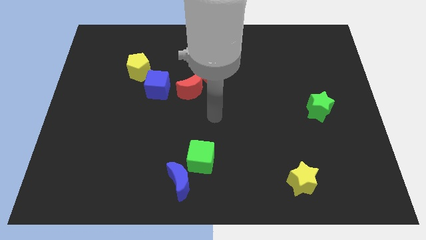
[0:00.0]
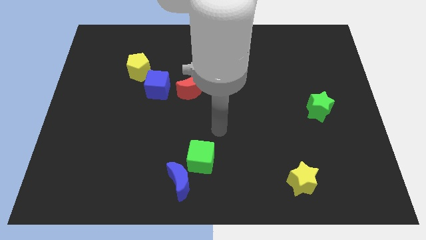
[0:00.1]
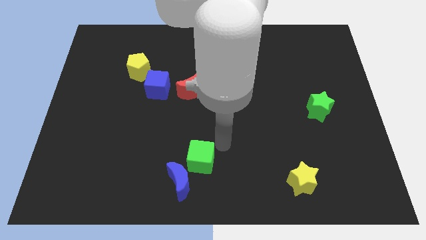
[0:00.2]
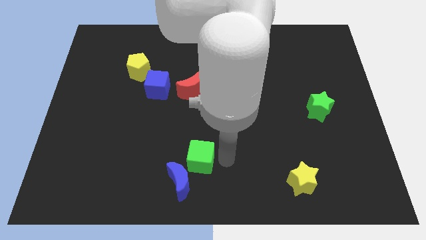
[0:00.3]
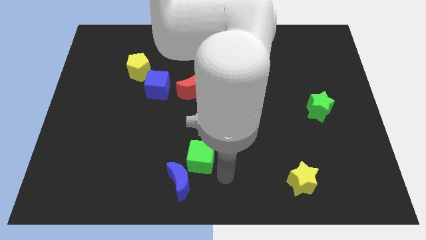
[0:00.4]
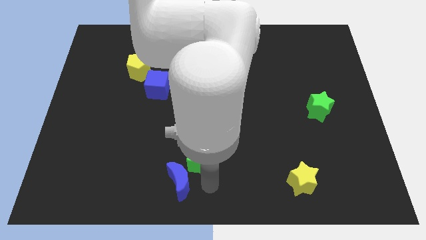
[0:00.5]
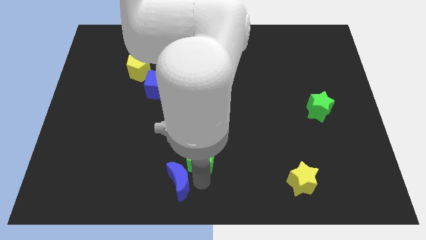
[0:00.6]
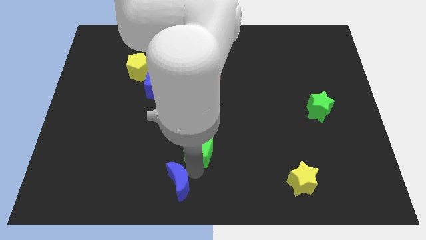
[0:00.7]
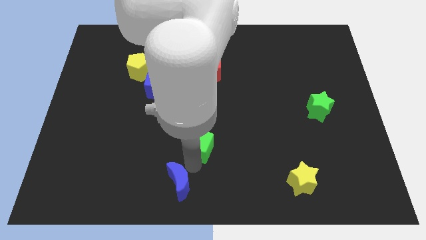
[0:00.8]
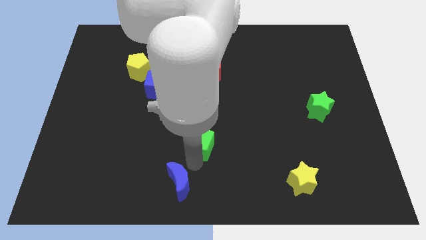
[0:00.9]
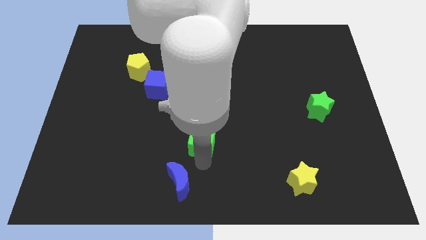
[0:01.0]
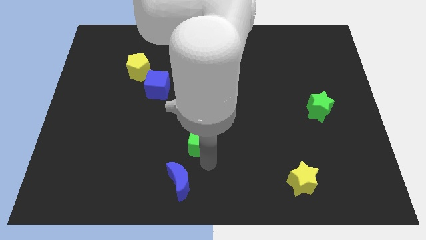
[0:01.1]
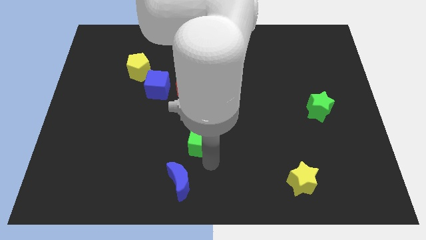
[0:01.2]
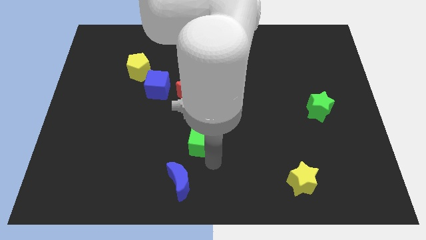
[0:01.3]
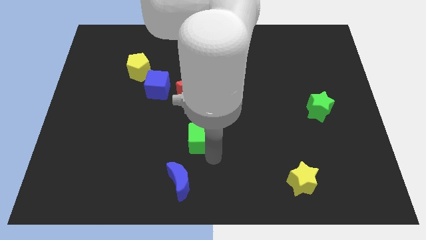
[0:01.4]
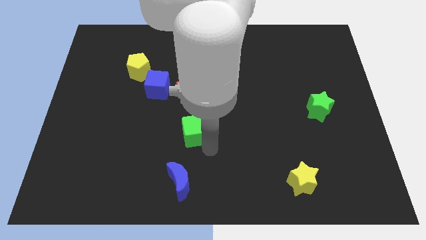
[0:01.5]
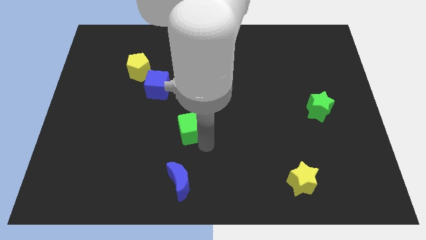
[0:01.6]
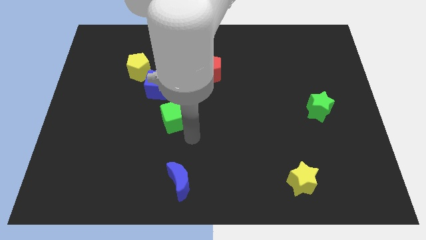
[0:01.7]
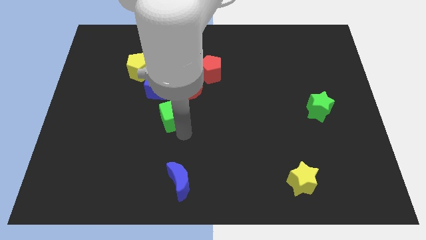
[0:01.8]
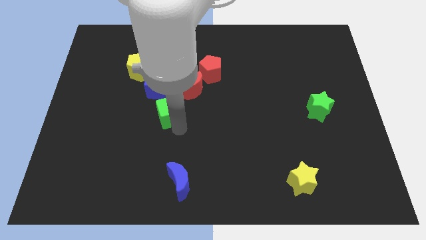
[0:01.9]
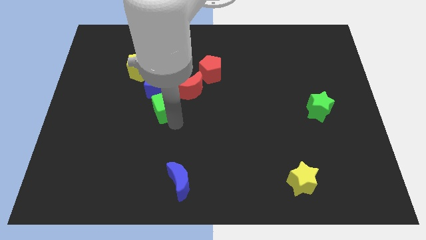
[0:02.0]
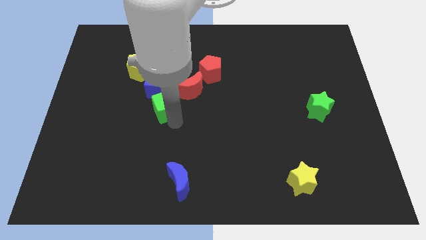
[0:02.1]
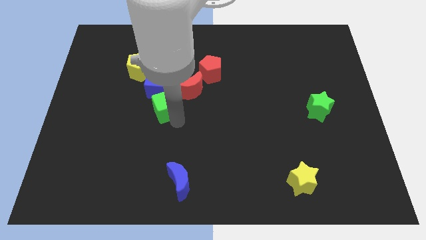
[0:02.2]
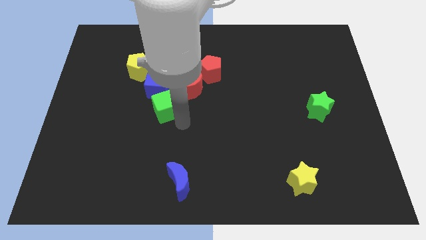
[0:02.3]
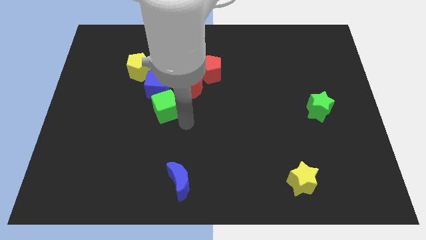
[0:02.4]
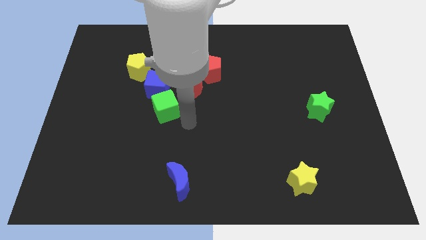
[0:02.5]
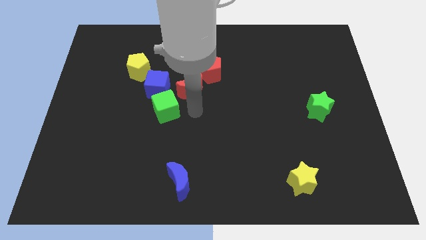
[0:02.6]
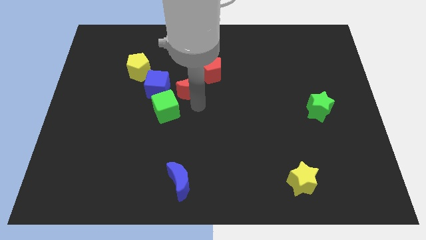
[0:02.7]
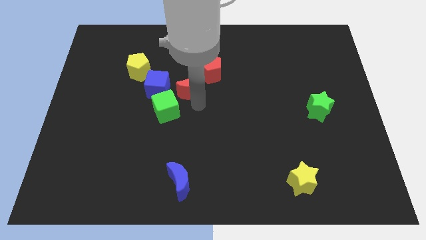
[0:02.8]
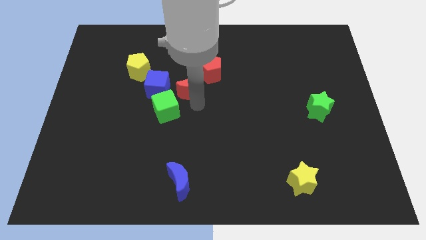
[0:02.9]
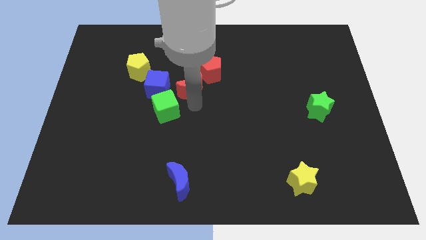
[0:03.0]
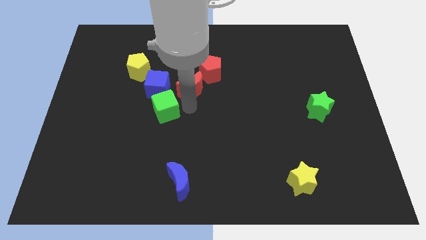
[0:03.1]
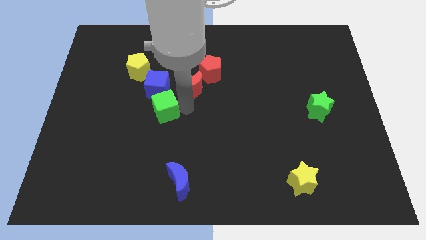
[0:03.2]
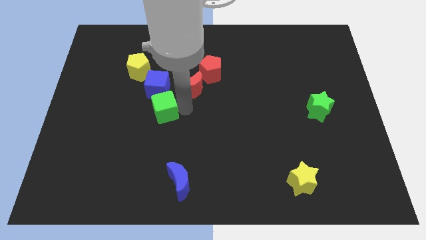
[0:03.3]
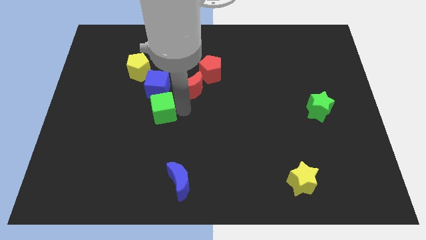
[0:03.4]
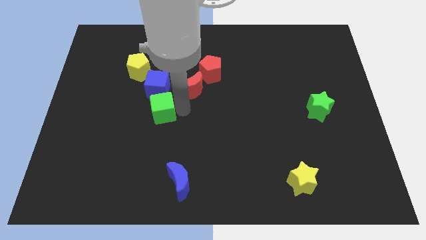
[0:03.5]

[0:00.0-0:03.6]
place the green cube towards the bottom right side of the blue cube

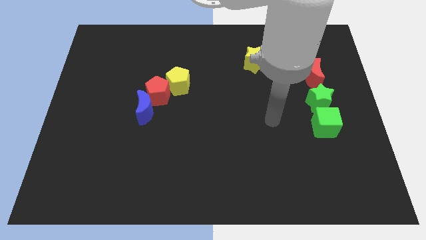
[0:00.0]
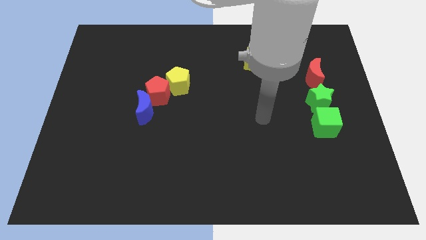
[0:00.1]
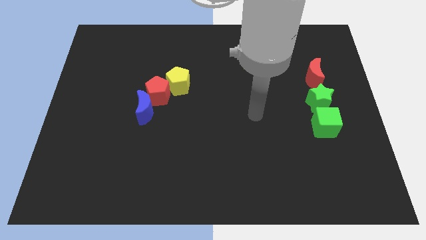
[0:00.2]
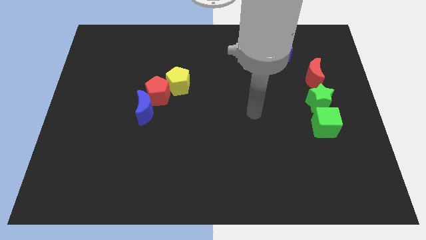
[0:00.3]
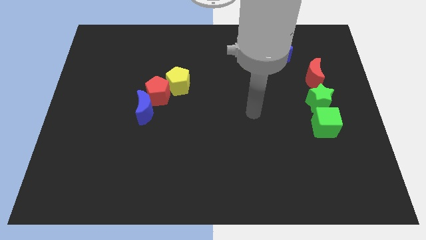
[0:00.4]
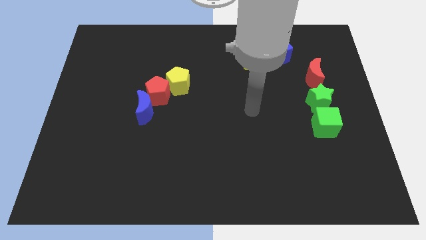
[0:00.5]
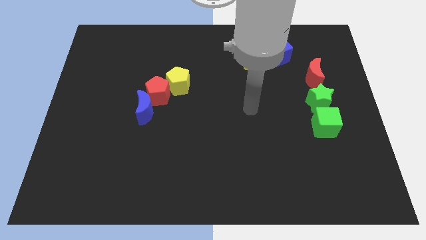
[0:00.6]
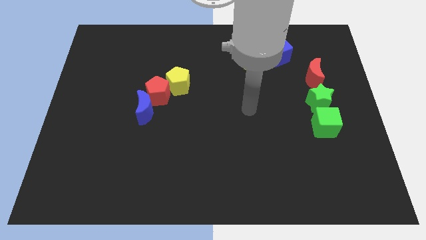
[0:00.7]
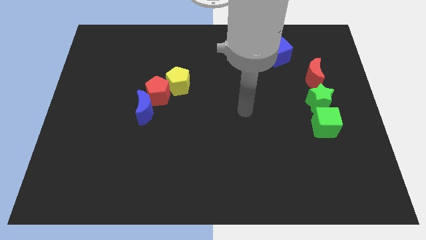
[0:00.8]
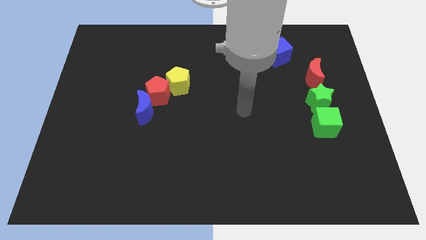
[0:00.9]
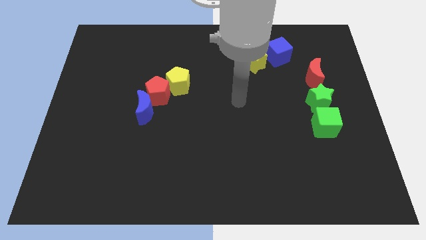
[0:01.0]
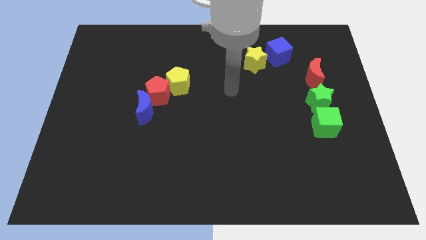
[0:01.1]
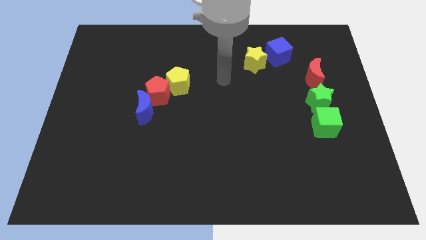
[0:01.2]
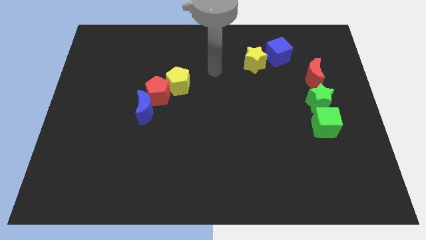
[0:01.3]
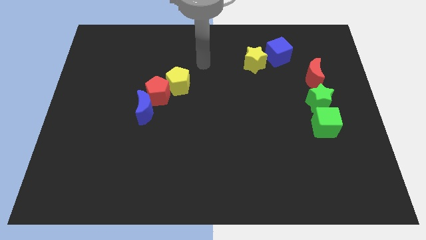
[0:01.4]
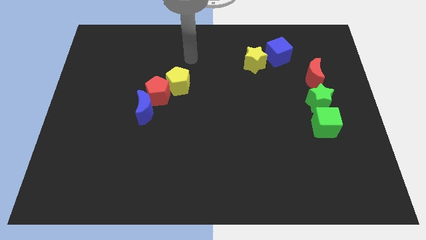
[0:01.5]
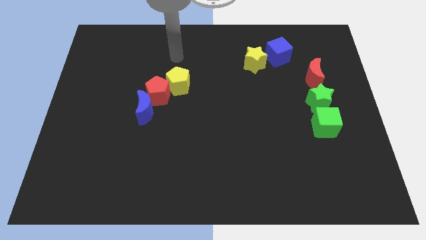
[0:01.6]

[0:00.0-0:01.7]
point your arm at the top of the yellow pentagon

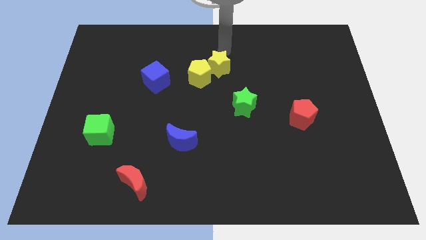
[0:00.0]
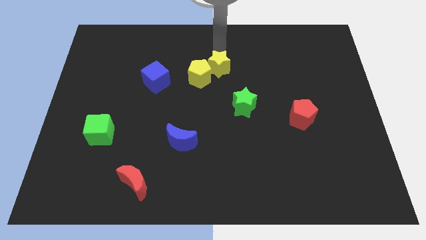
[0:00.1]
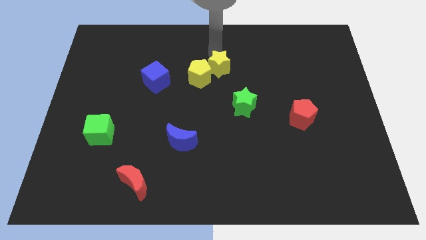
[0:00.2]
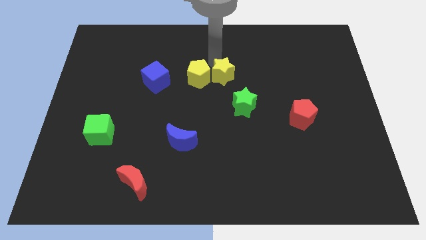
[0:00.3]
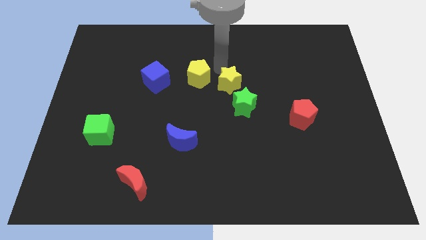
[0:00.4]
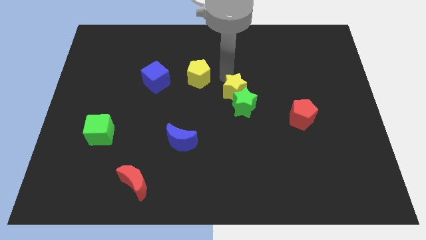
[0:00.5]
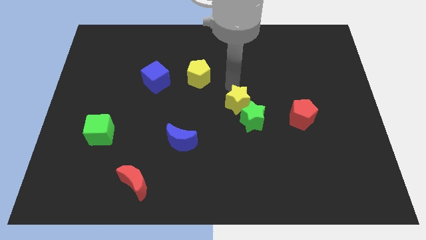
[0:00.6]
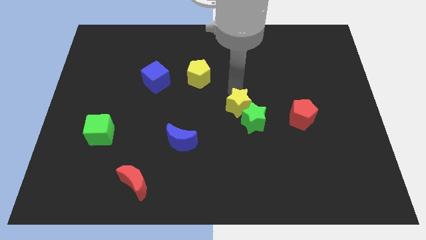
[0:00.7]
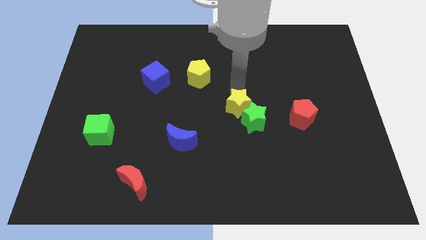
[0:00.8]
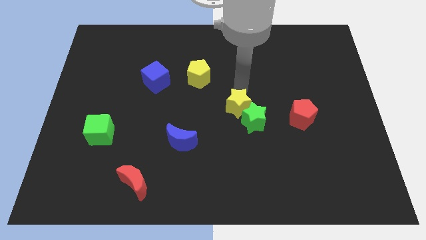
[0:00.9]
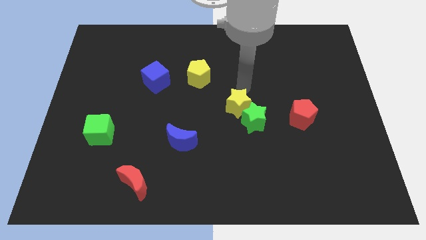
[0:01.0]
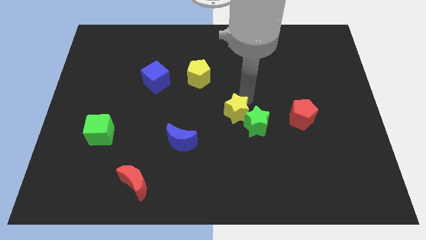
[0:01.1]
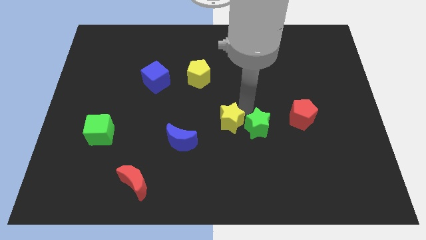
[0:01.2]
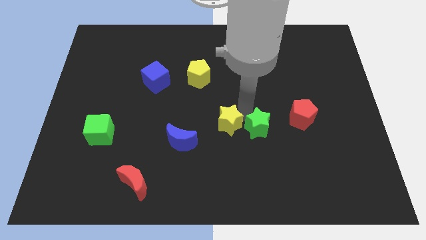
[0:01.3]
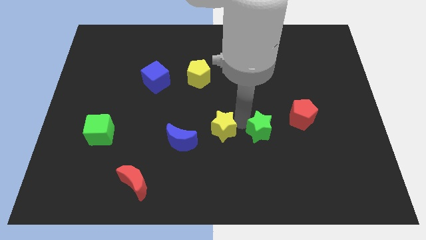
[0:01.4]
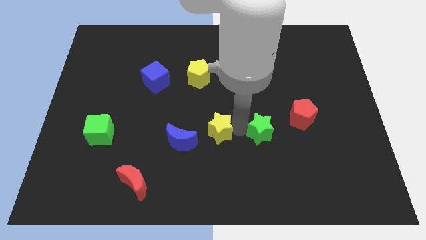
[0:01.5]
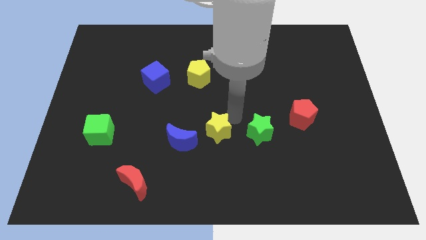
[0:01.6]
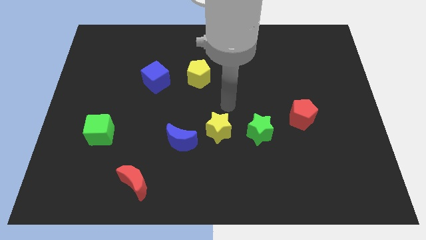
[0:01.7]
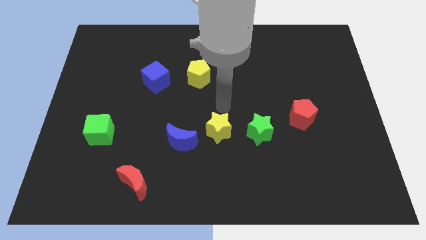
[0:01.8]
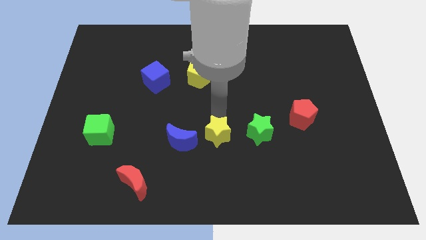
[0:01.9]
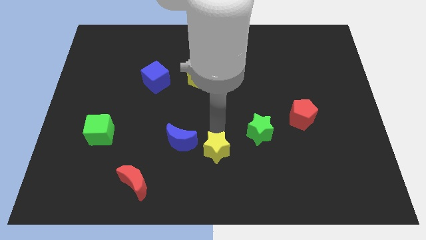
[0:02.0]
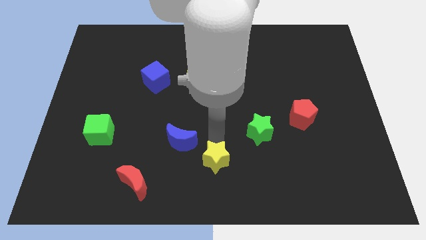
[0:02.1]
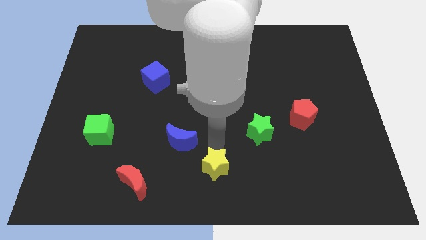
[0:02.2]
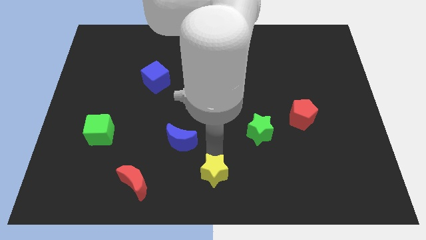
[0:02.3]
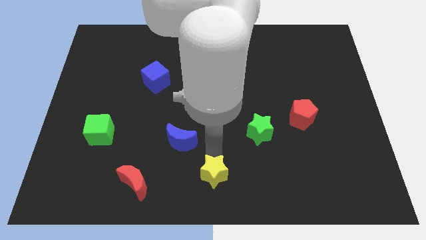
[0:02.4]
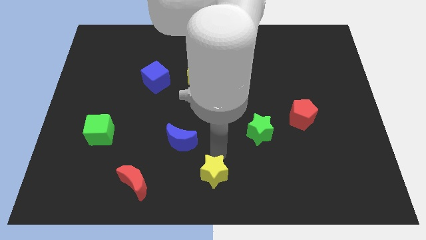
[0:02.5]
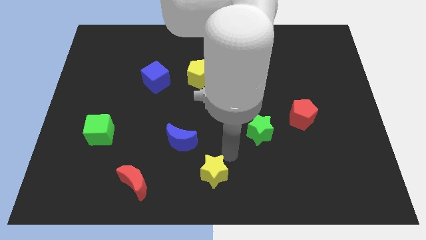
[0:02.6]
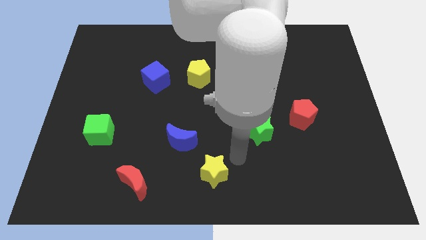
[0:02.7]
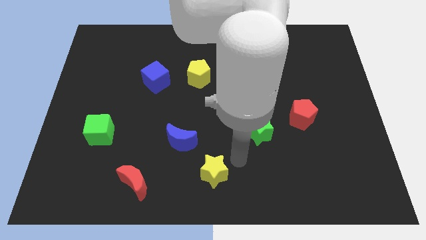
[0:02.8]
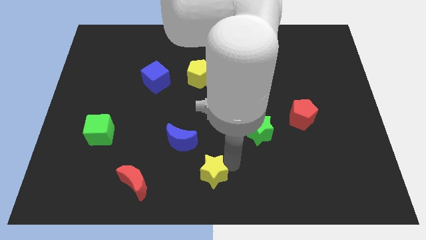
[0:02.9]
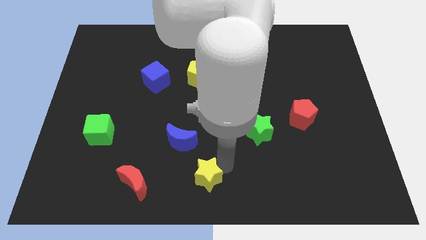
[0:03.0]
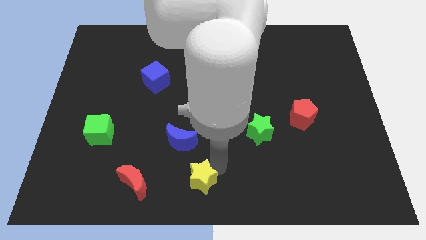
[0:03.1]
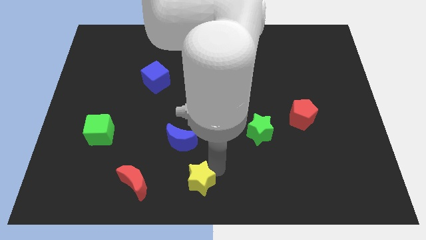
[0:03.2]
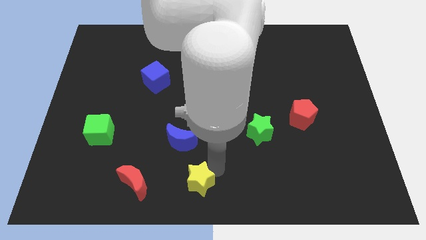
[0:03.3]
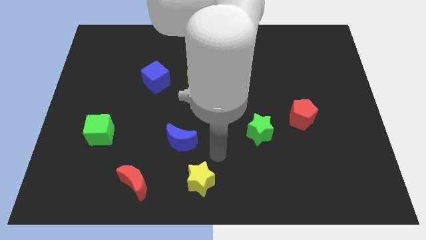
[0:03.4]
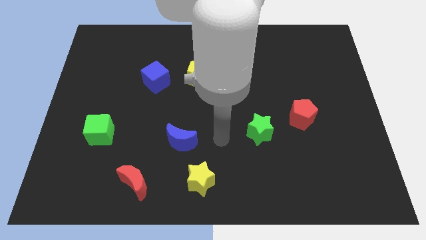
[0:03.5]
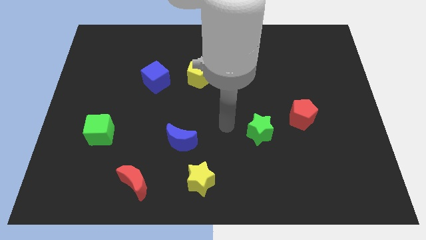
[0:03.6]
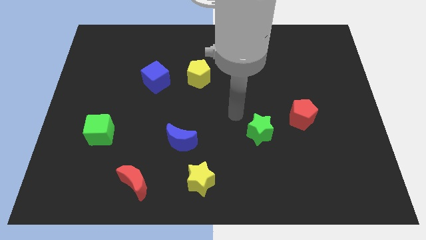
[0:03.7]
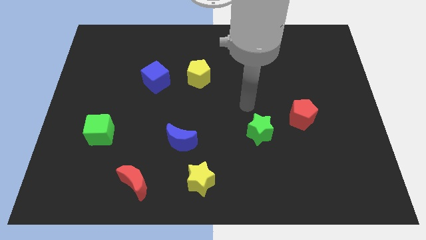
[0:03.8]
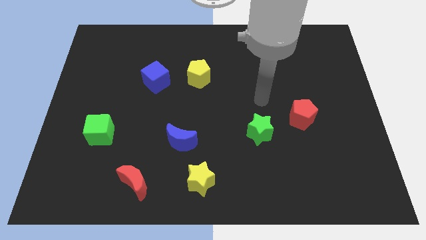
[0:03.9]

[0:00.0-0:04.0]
slide the yellow star towards the bottom center of the board
